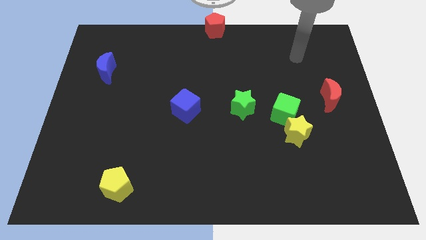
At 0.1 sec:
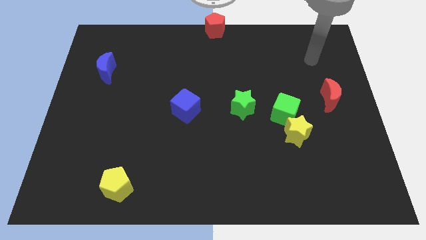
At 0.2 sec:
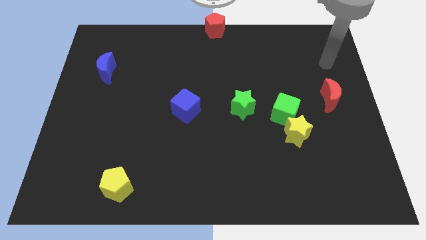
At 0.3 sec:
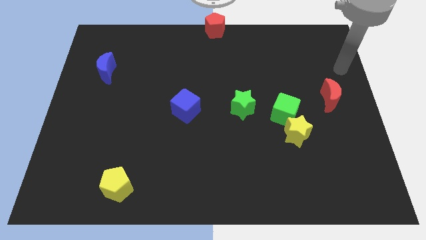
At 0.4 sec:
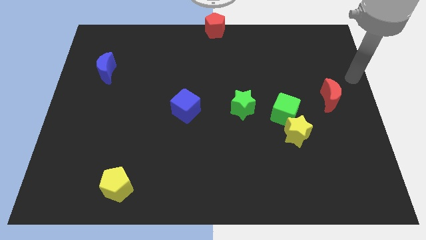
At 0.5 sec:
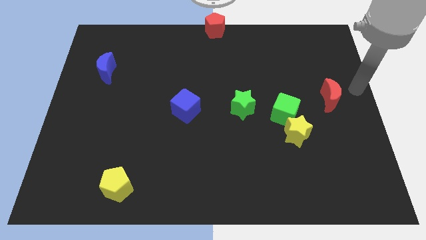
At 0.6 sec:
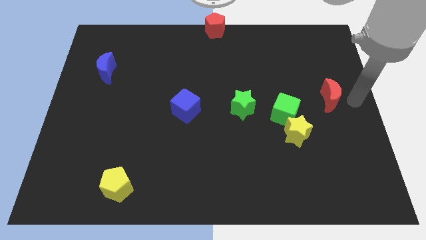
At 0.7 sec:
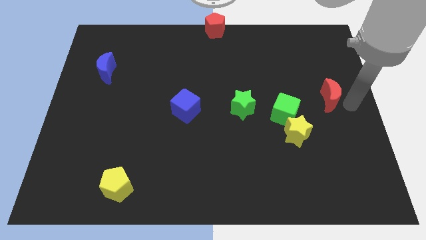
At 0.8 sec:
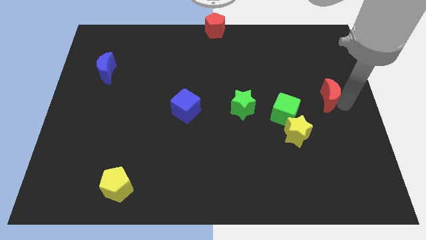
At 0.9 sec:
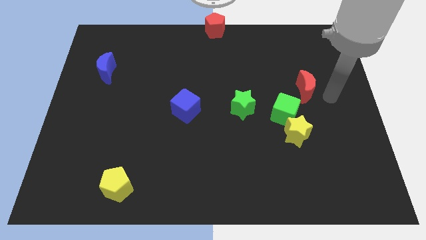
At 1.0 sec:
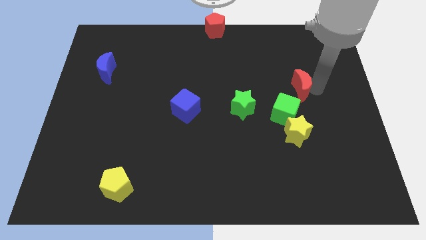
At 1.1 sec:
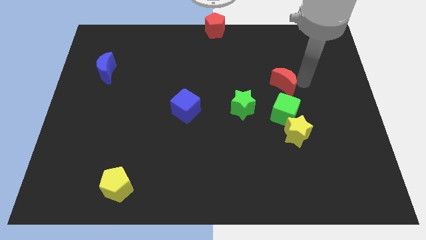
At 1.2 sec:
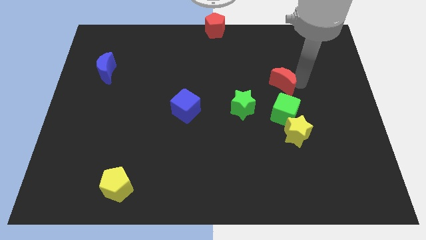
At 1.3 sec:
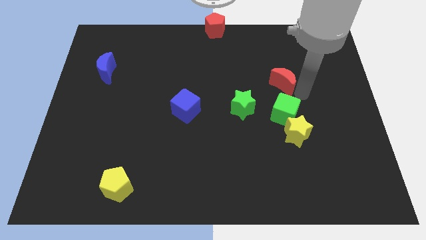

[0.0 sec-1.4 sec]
place the red crescent above the green cube

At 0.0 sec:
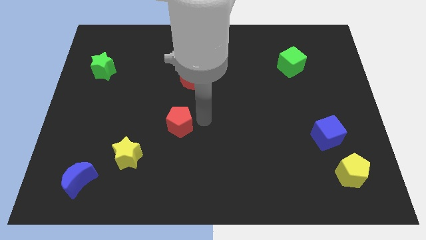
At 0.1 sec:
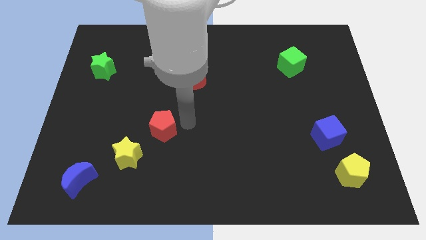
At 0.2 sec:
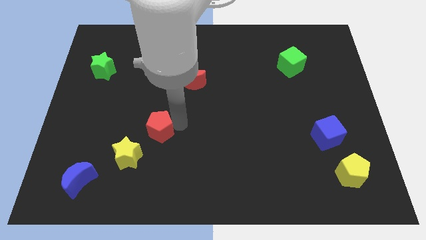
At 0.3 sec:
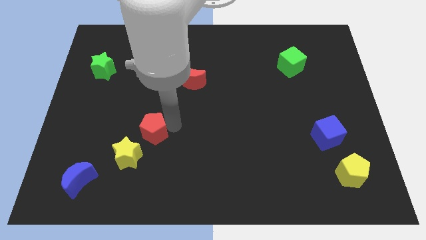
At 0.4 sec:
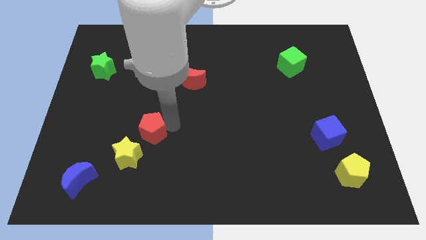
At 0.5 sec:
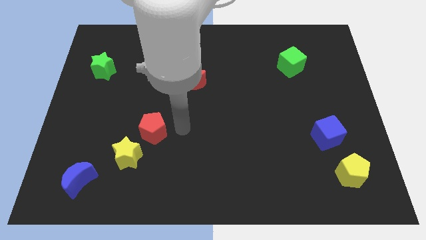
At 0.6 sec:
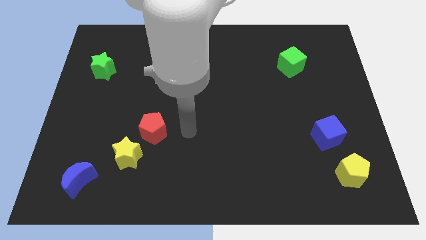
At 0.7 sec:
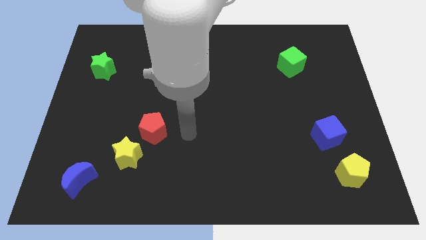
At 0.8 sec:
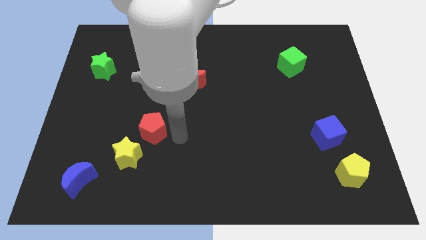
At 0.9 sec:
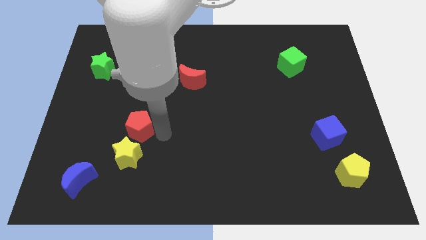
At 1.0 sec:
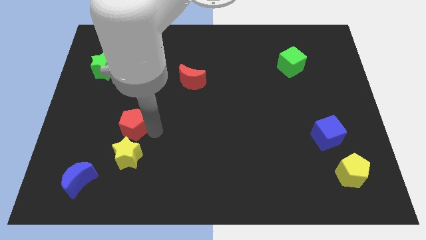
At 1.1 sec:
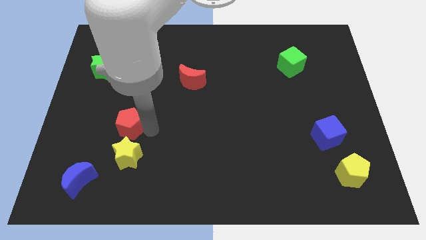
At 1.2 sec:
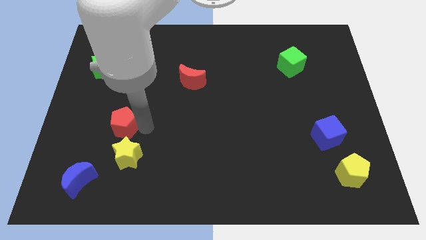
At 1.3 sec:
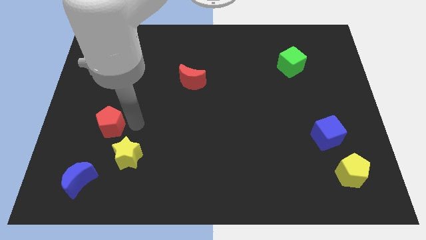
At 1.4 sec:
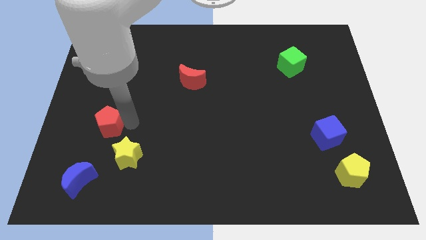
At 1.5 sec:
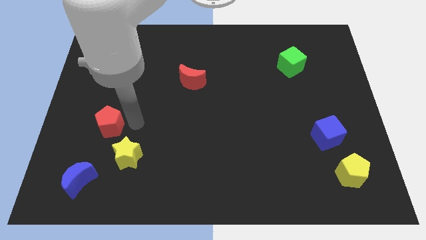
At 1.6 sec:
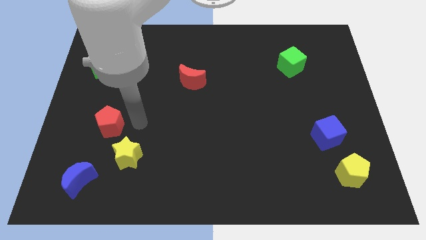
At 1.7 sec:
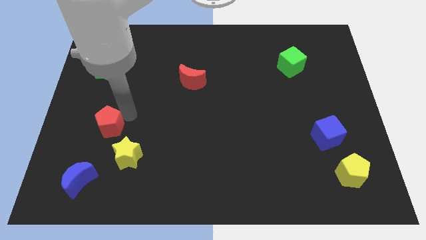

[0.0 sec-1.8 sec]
place the red pentagon left diagonally towards yellow star

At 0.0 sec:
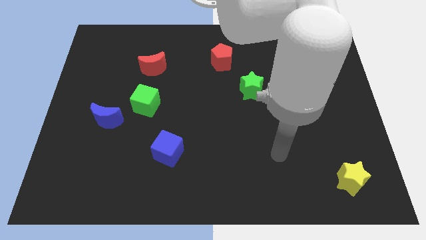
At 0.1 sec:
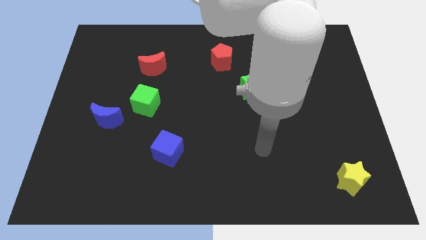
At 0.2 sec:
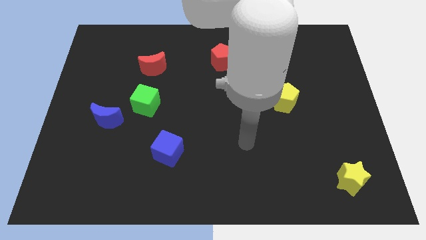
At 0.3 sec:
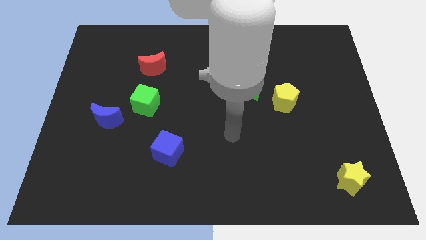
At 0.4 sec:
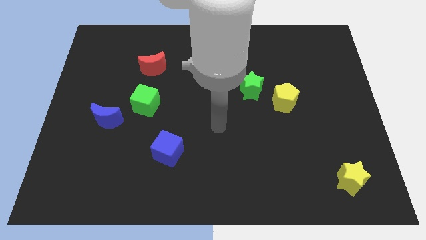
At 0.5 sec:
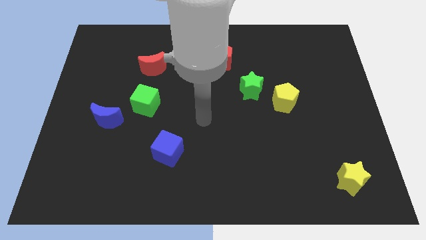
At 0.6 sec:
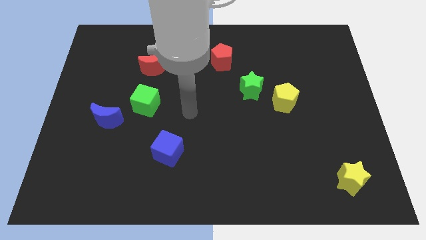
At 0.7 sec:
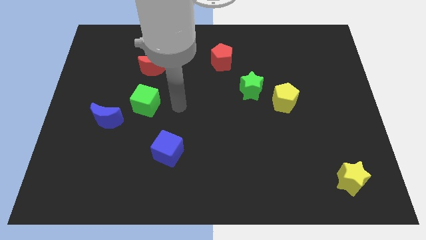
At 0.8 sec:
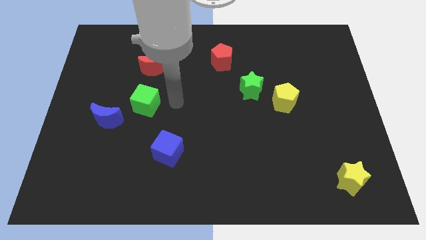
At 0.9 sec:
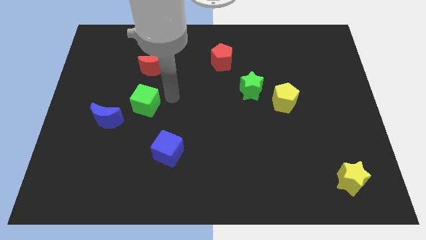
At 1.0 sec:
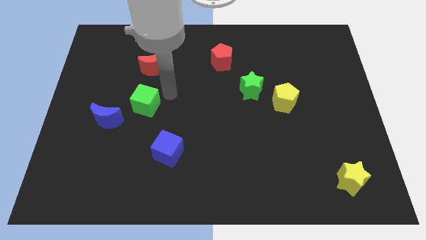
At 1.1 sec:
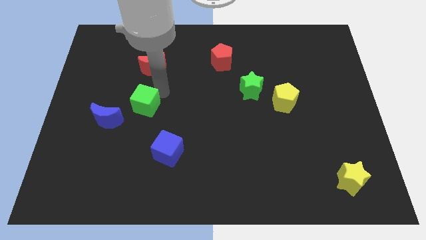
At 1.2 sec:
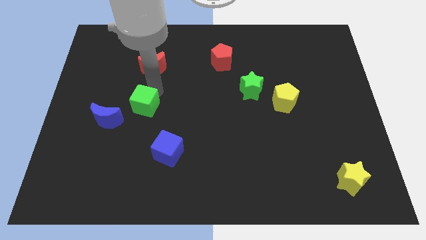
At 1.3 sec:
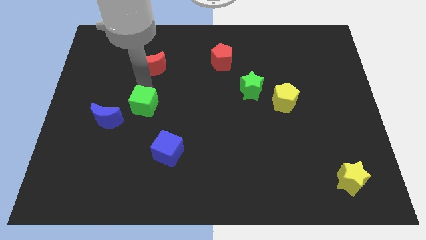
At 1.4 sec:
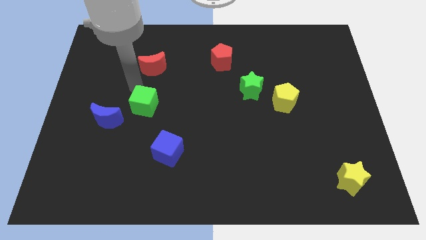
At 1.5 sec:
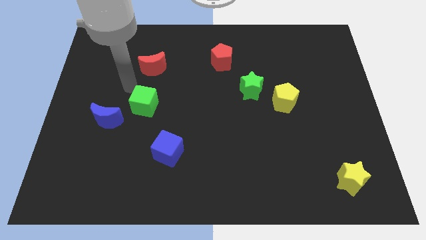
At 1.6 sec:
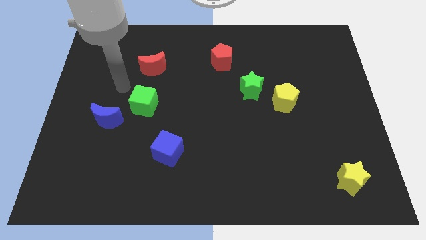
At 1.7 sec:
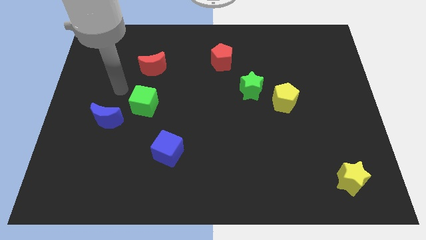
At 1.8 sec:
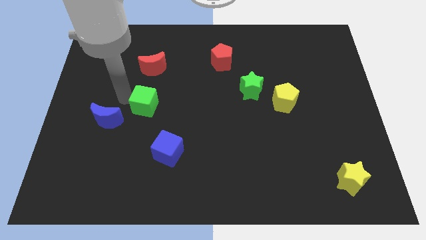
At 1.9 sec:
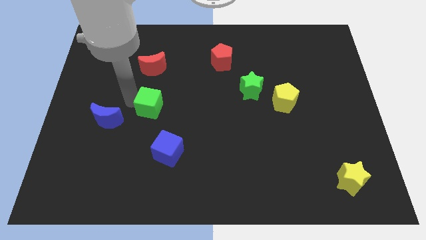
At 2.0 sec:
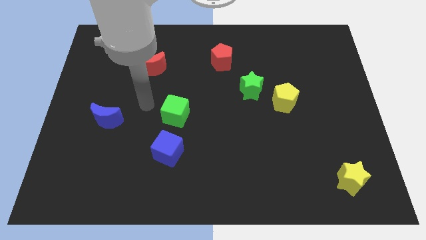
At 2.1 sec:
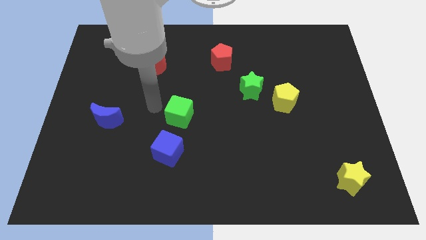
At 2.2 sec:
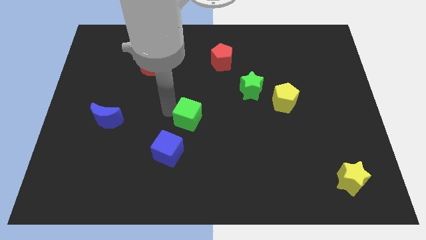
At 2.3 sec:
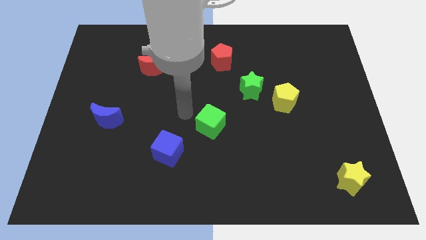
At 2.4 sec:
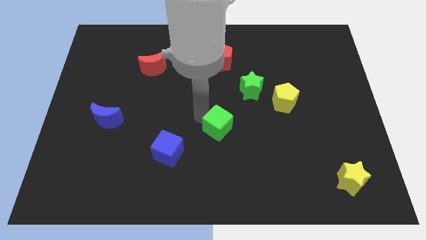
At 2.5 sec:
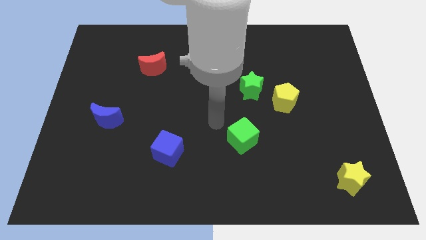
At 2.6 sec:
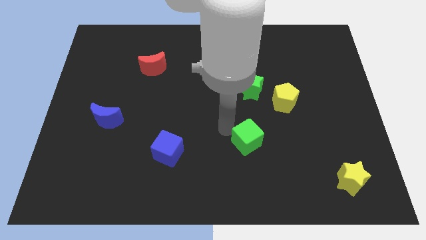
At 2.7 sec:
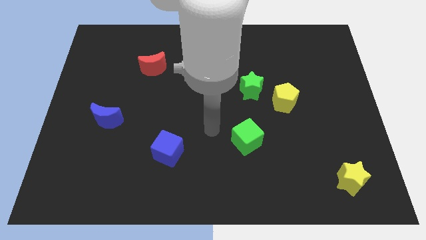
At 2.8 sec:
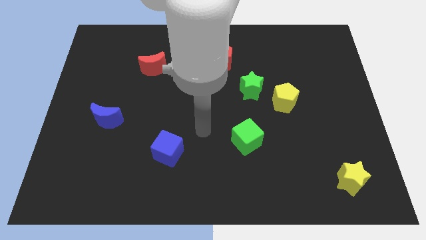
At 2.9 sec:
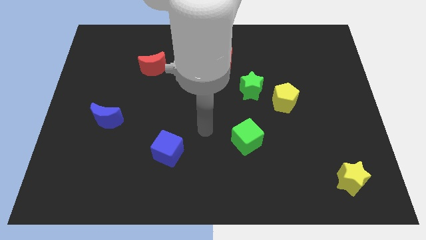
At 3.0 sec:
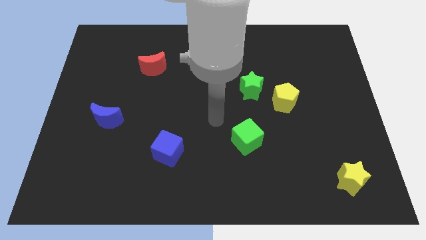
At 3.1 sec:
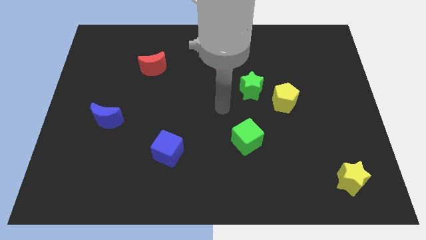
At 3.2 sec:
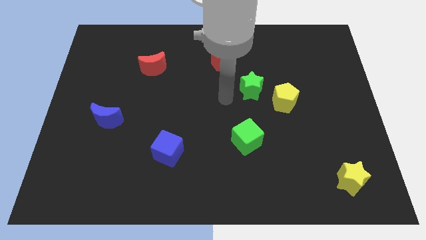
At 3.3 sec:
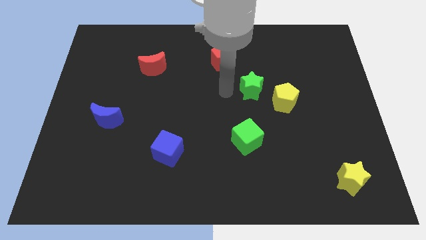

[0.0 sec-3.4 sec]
place the green cube vertically below the green star

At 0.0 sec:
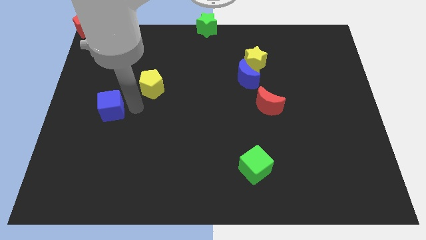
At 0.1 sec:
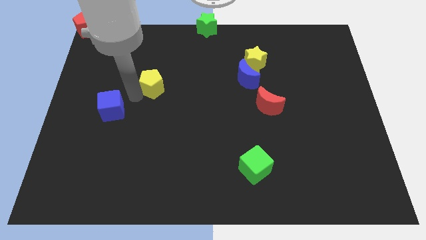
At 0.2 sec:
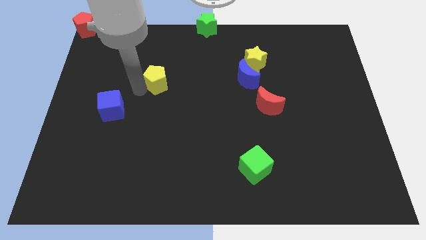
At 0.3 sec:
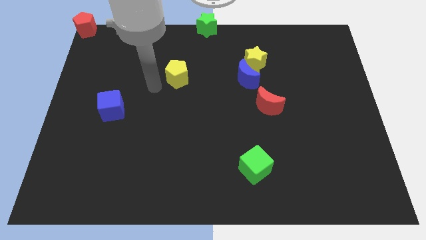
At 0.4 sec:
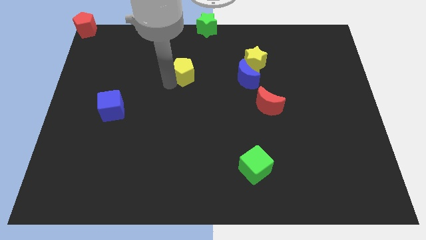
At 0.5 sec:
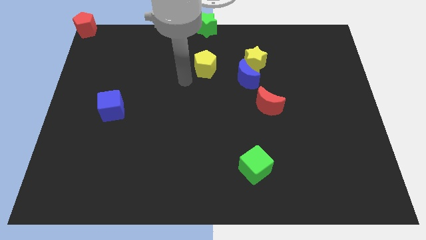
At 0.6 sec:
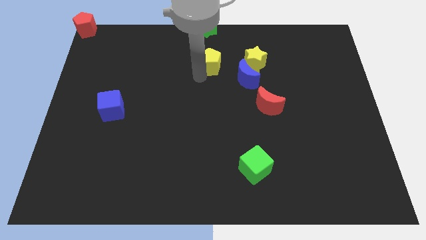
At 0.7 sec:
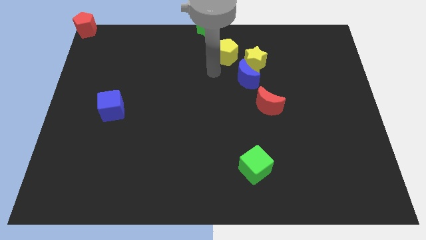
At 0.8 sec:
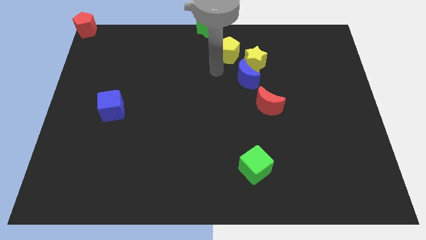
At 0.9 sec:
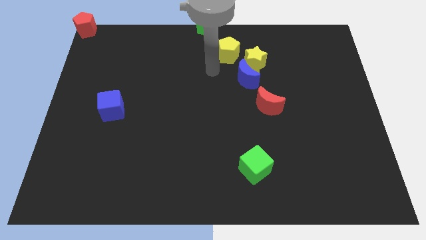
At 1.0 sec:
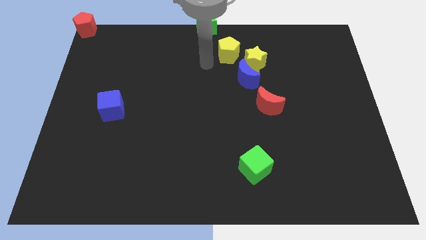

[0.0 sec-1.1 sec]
push the yellow pentagon right diagonal to green star

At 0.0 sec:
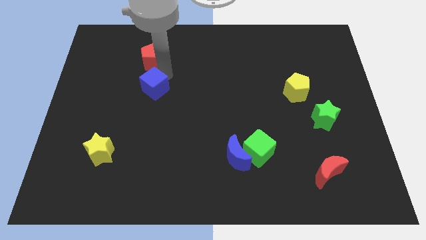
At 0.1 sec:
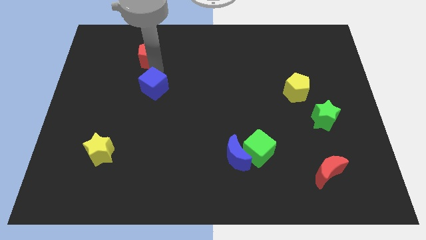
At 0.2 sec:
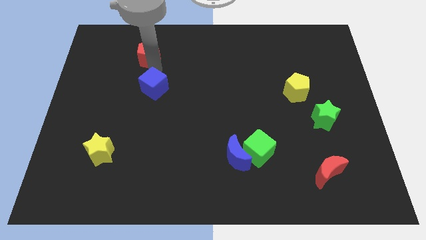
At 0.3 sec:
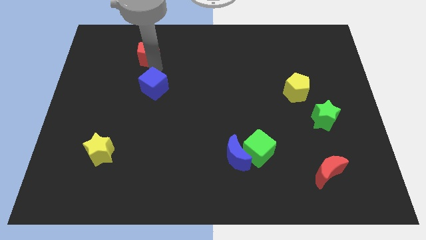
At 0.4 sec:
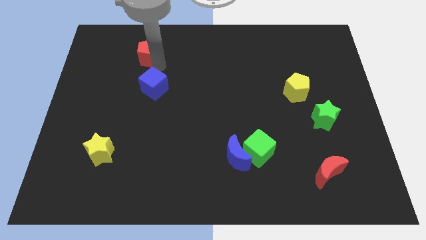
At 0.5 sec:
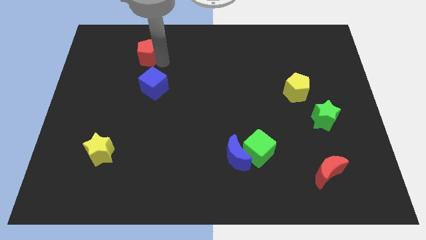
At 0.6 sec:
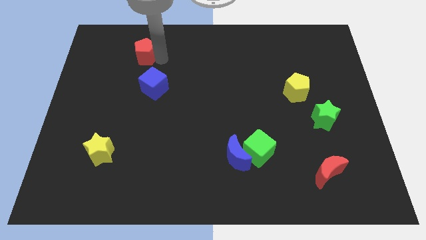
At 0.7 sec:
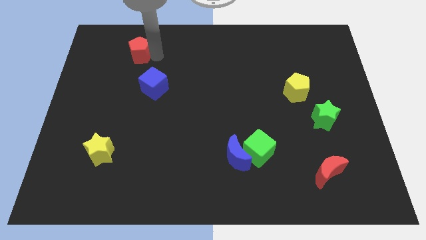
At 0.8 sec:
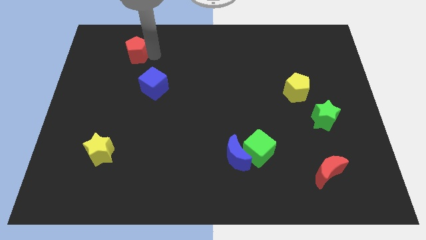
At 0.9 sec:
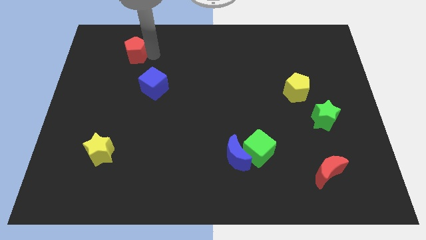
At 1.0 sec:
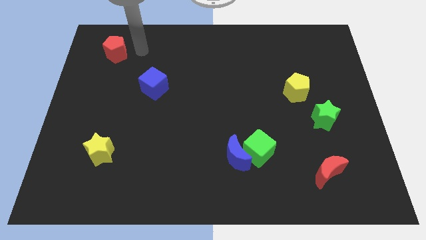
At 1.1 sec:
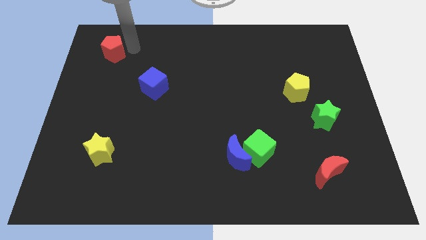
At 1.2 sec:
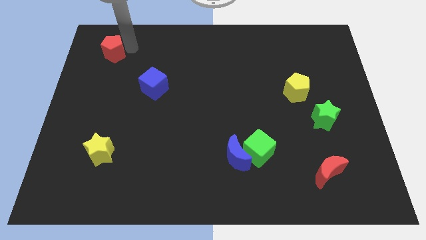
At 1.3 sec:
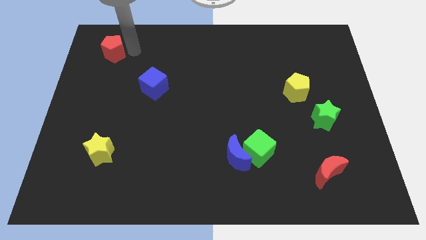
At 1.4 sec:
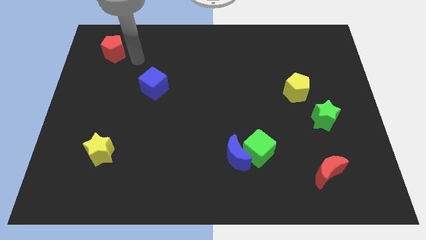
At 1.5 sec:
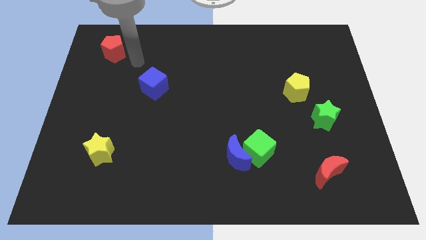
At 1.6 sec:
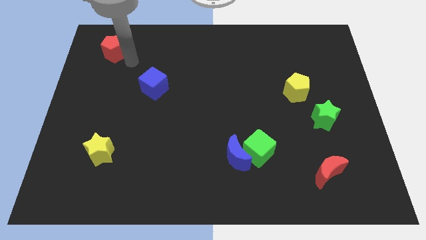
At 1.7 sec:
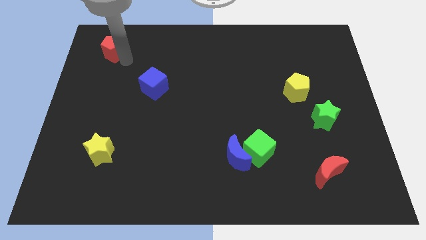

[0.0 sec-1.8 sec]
separate red pentagon from blue cube
